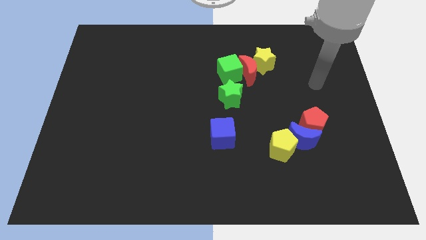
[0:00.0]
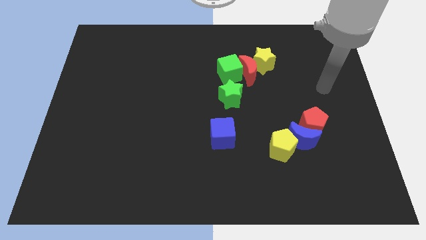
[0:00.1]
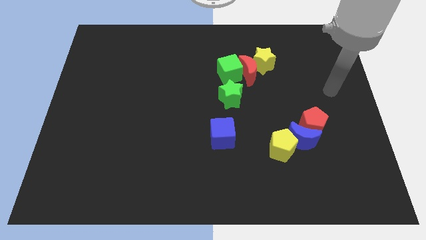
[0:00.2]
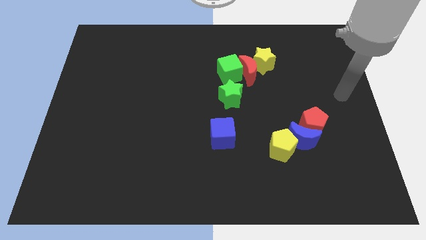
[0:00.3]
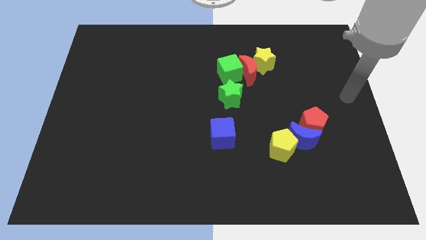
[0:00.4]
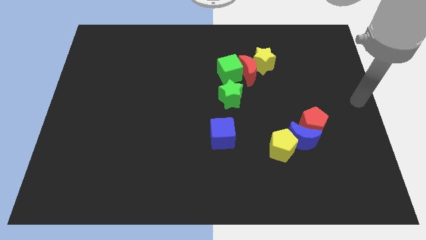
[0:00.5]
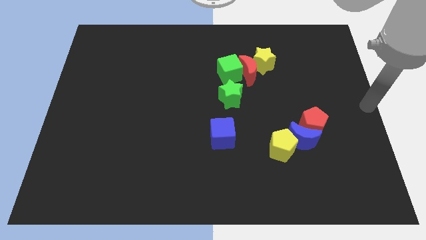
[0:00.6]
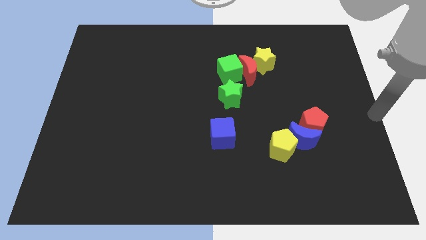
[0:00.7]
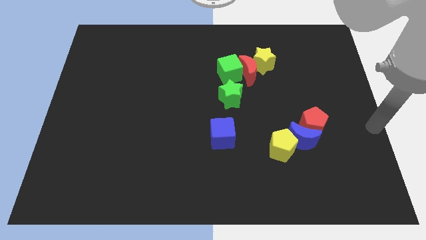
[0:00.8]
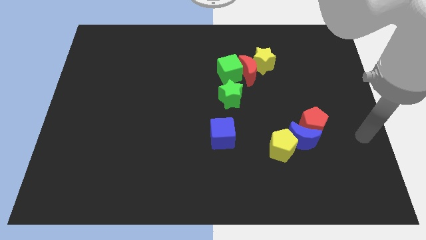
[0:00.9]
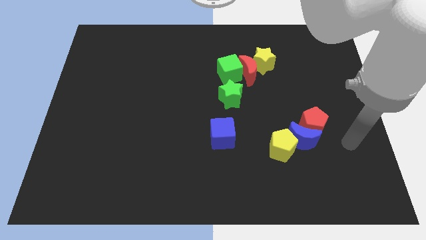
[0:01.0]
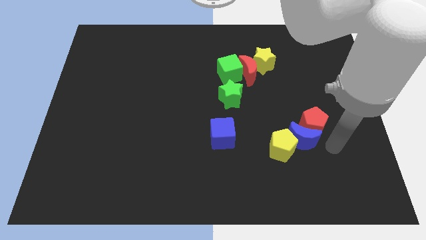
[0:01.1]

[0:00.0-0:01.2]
move the arm towards the blue crescent

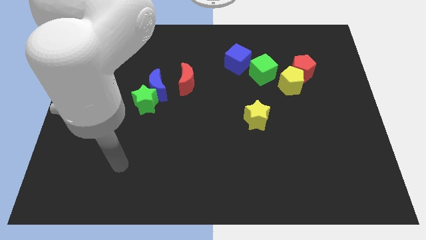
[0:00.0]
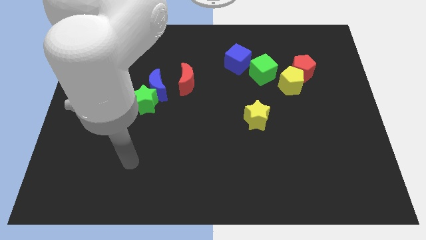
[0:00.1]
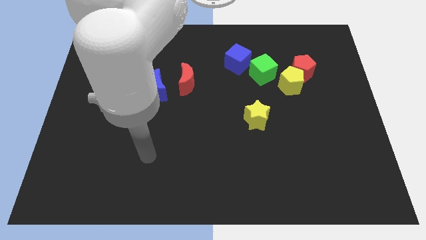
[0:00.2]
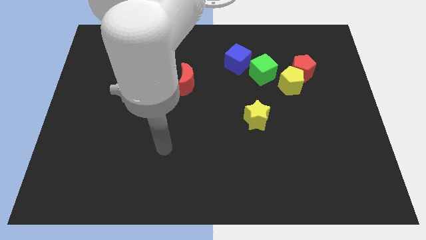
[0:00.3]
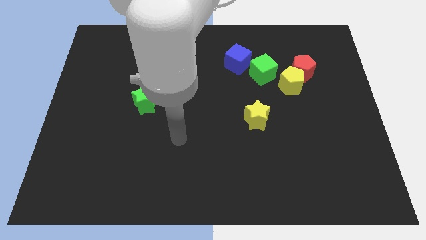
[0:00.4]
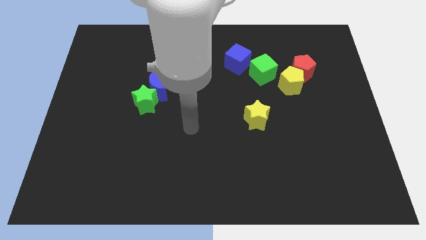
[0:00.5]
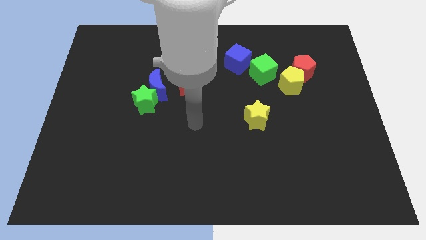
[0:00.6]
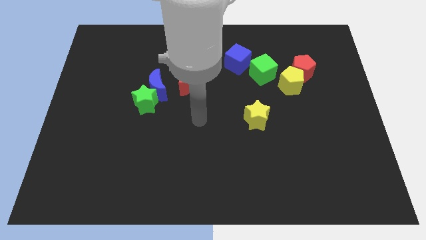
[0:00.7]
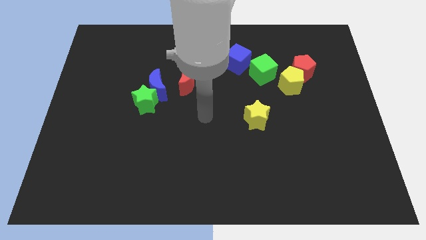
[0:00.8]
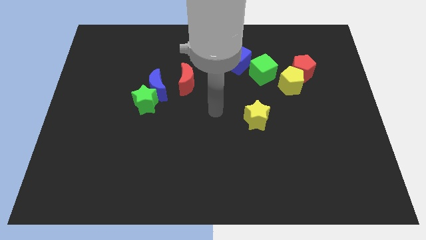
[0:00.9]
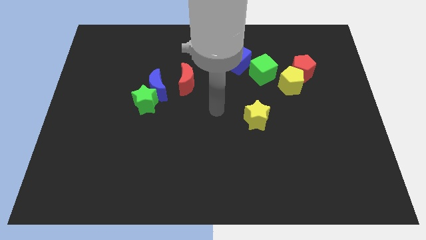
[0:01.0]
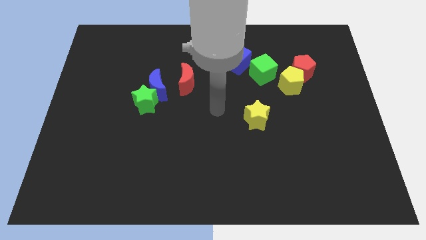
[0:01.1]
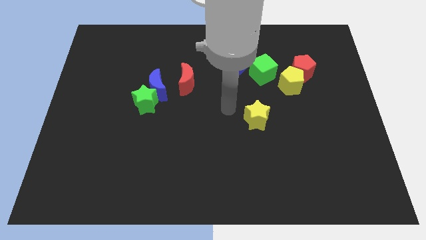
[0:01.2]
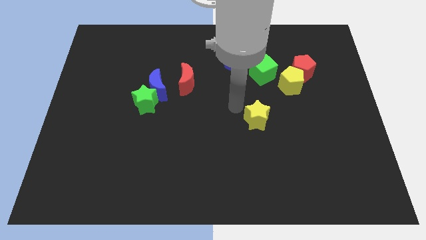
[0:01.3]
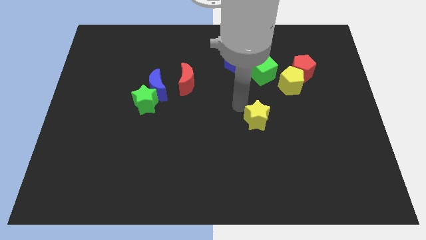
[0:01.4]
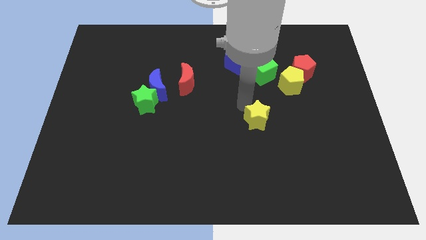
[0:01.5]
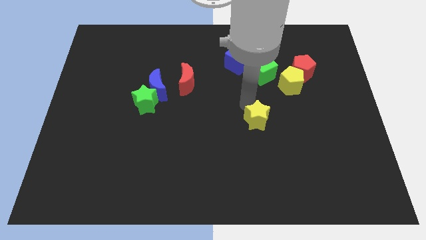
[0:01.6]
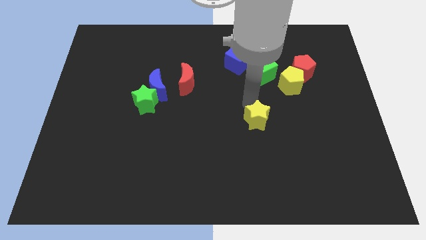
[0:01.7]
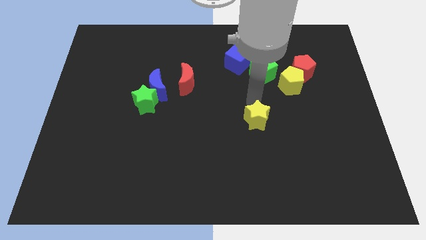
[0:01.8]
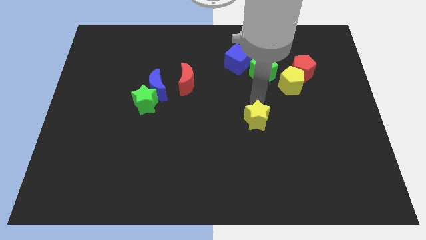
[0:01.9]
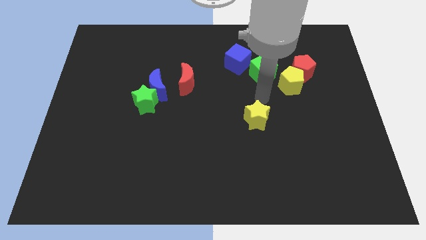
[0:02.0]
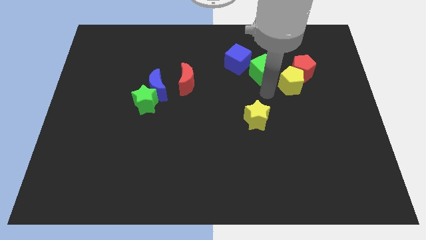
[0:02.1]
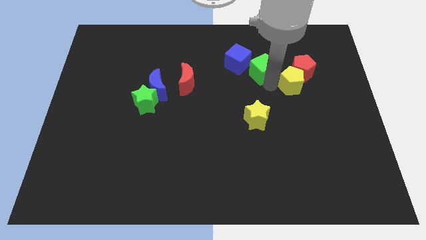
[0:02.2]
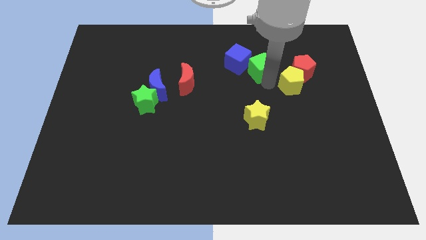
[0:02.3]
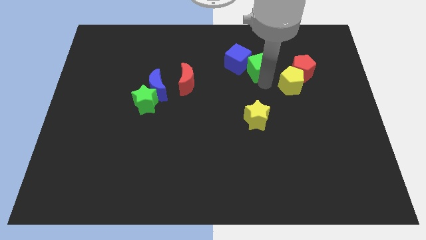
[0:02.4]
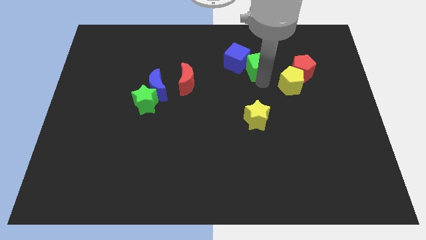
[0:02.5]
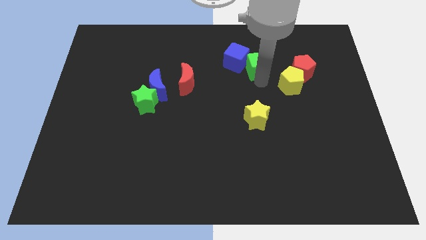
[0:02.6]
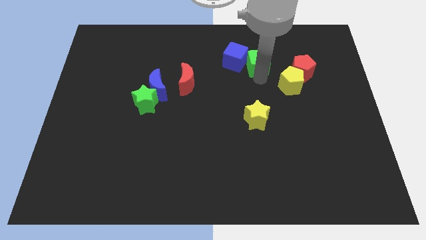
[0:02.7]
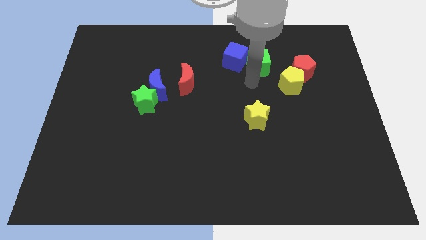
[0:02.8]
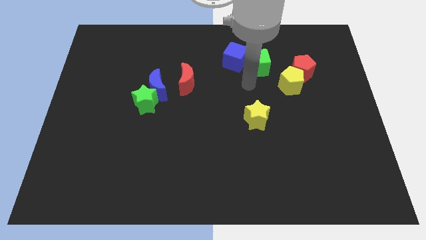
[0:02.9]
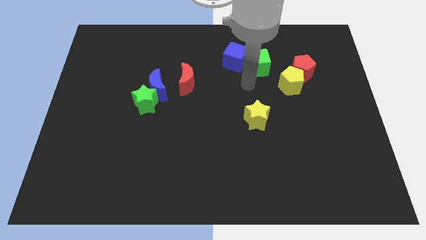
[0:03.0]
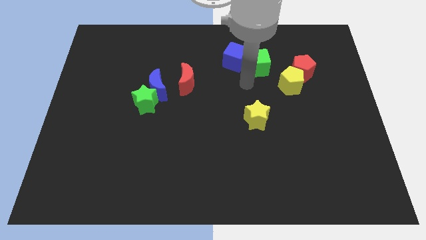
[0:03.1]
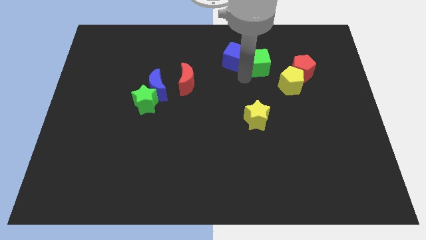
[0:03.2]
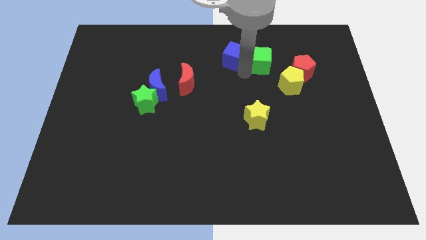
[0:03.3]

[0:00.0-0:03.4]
put the green cube and the blue cube together

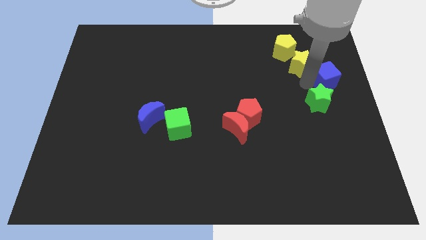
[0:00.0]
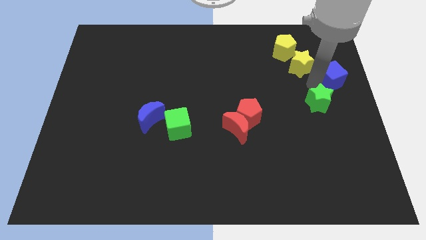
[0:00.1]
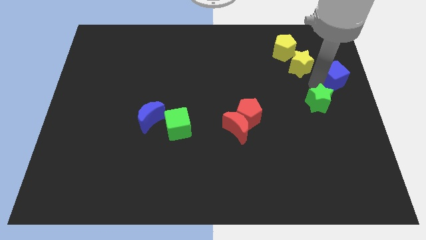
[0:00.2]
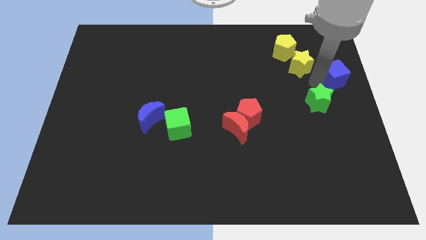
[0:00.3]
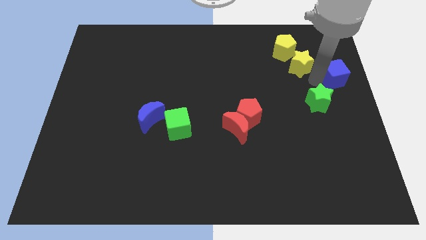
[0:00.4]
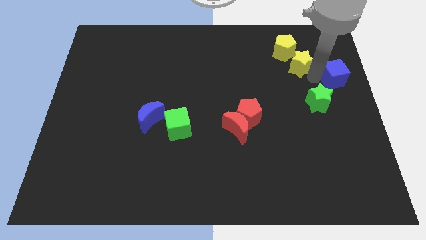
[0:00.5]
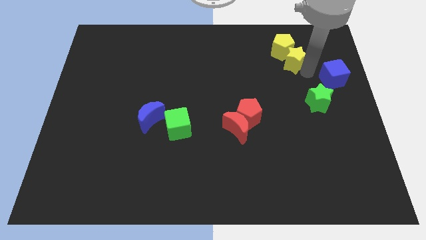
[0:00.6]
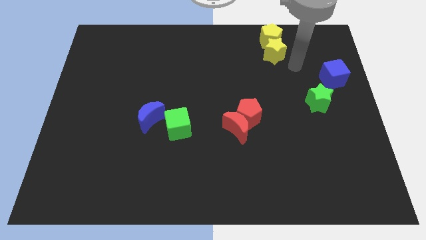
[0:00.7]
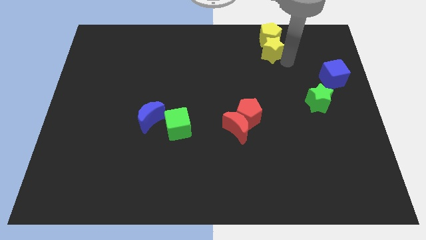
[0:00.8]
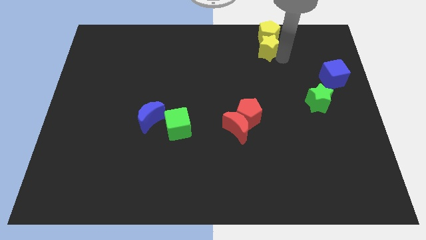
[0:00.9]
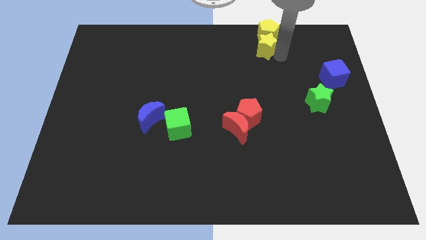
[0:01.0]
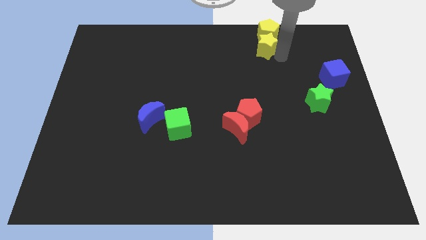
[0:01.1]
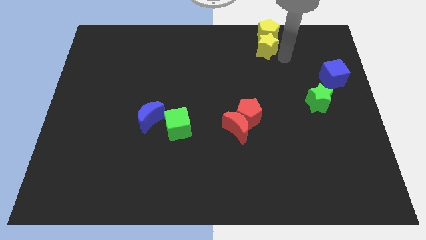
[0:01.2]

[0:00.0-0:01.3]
push the yellow star into the yellow pentagon

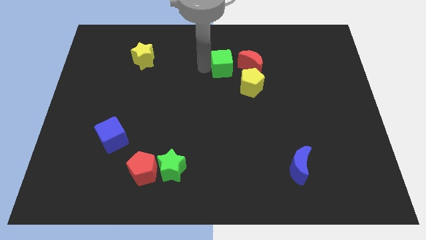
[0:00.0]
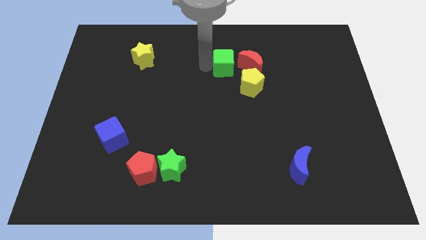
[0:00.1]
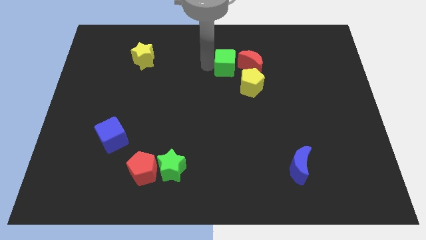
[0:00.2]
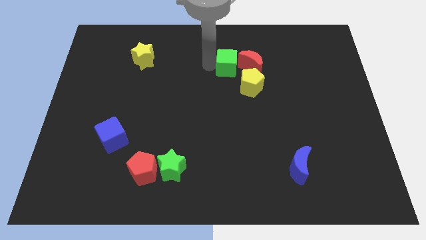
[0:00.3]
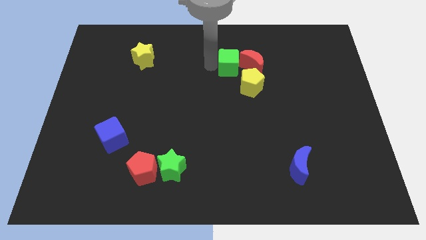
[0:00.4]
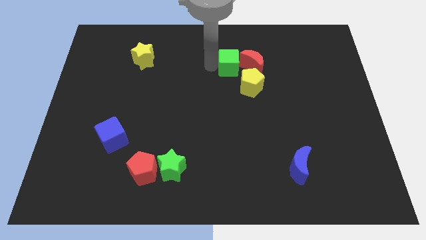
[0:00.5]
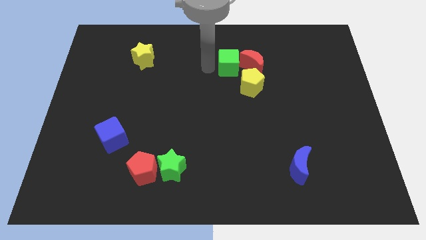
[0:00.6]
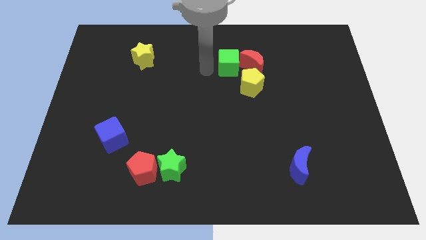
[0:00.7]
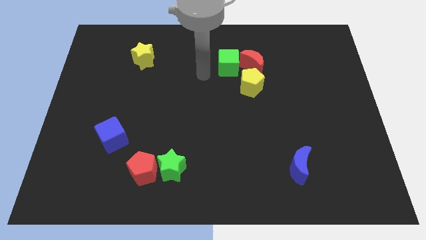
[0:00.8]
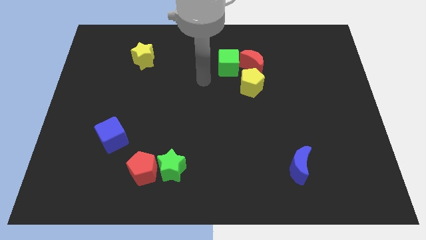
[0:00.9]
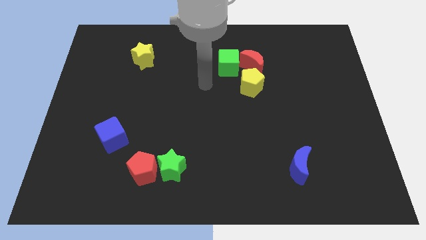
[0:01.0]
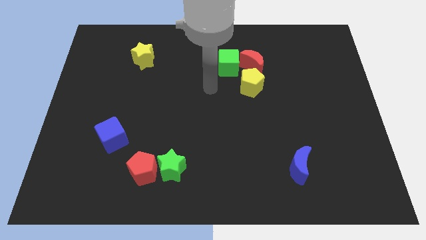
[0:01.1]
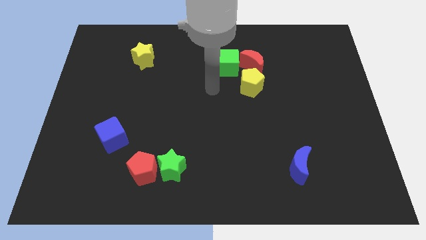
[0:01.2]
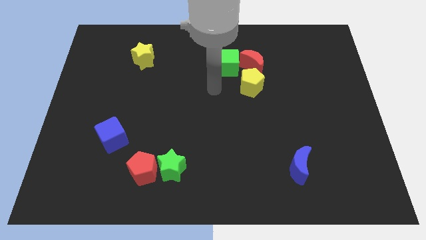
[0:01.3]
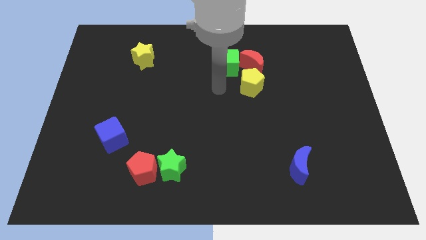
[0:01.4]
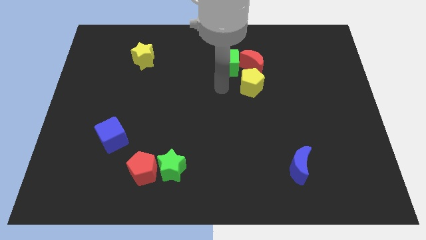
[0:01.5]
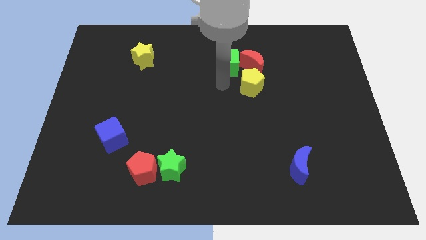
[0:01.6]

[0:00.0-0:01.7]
slightly touch red crescent with green cube

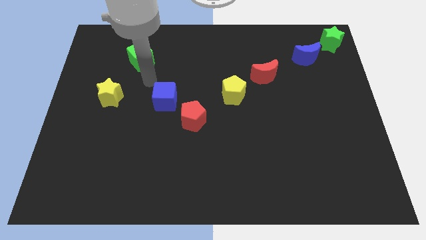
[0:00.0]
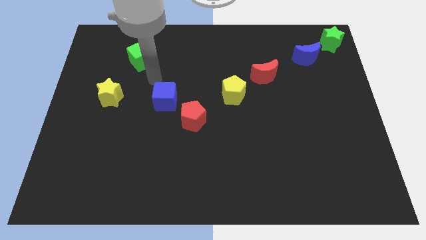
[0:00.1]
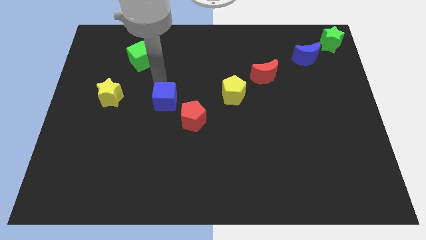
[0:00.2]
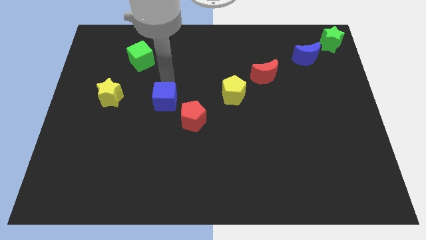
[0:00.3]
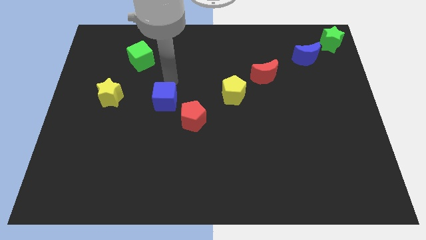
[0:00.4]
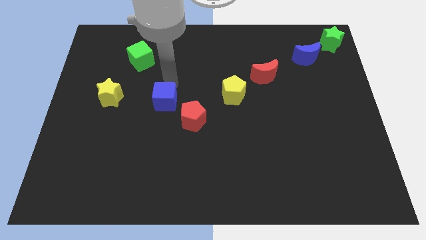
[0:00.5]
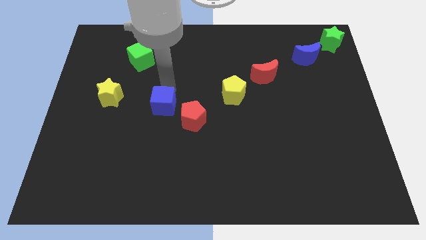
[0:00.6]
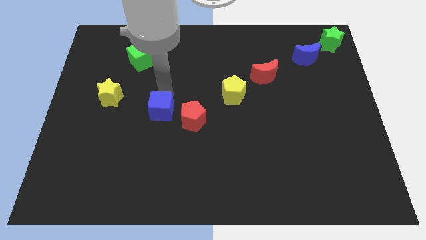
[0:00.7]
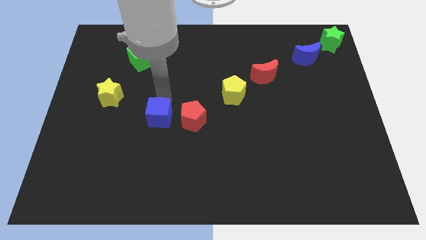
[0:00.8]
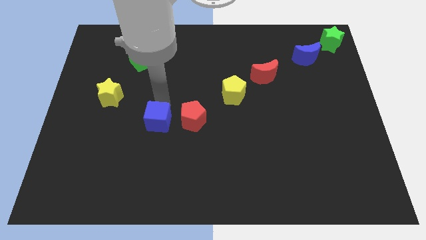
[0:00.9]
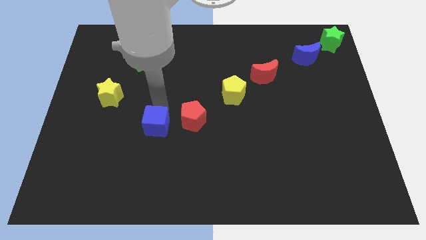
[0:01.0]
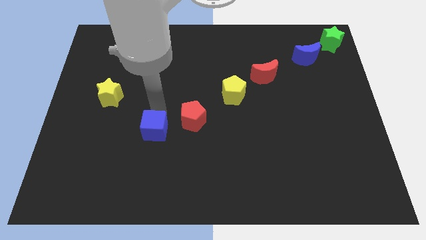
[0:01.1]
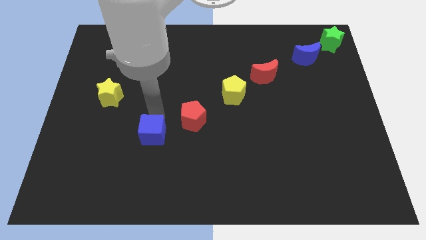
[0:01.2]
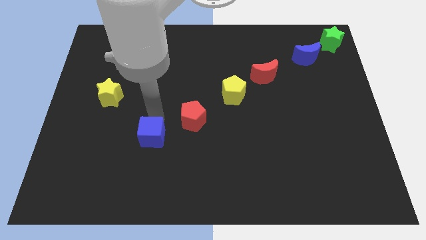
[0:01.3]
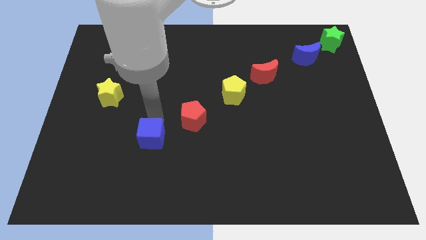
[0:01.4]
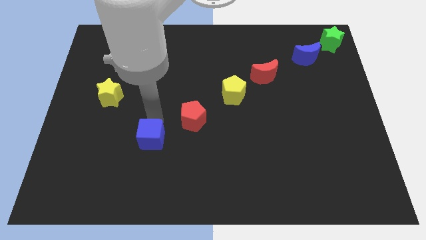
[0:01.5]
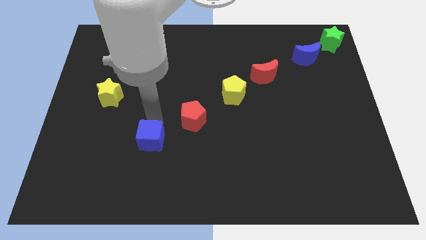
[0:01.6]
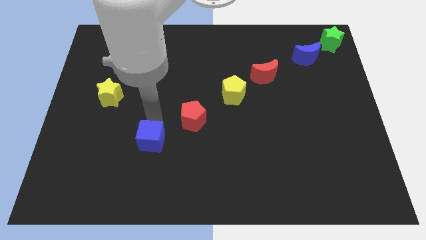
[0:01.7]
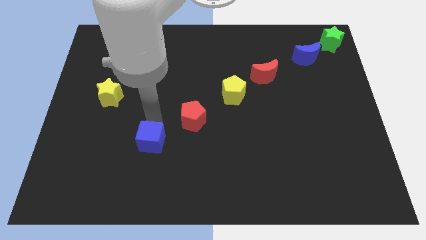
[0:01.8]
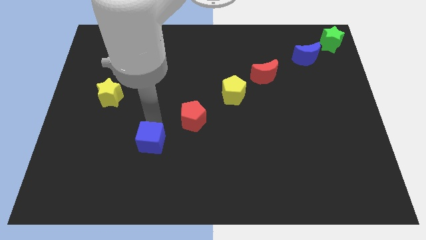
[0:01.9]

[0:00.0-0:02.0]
move the blue cube bottom left side of the red pentagon
